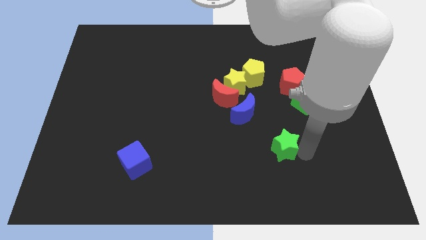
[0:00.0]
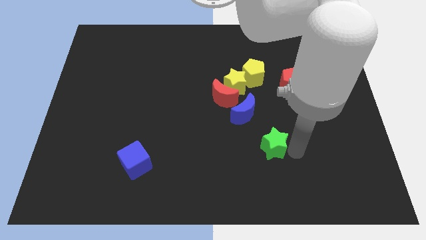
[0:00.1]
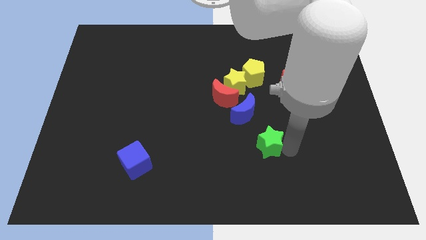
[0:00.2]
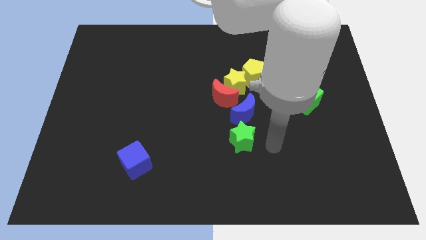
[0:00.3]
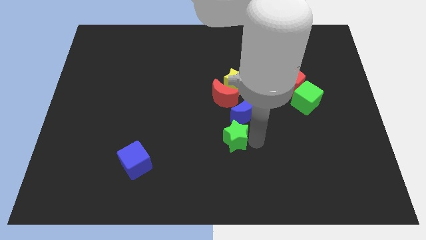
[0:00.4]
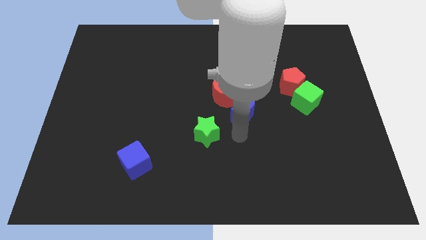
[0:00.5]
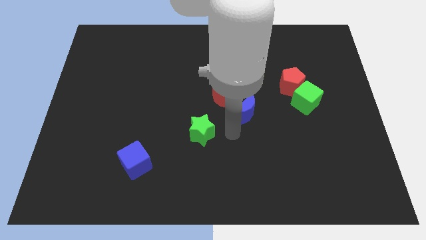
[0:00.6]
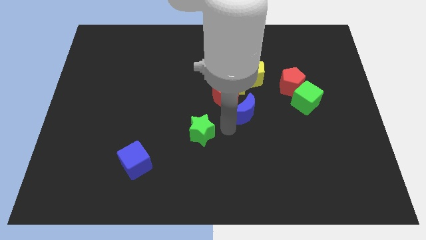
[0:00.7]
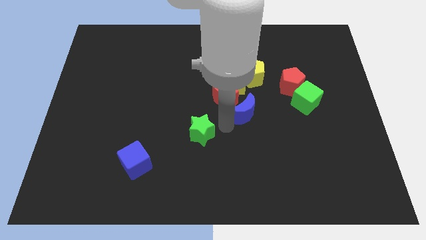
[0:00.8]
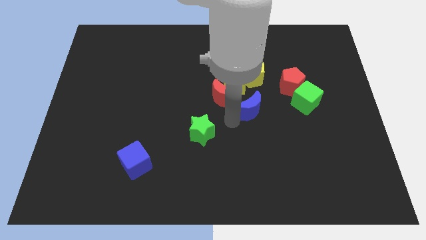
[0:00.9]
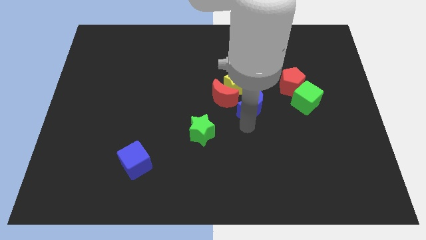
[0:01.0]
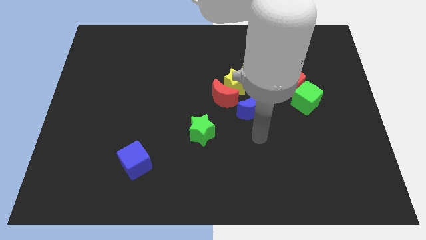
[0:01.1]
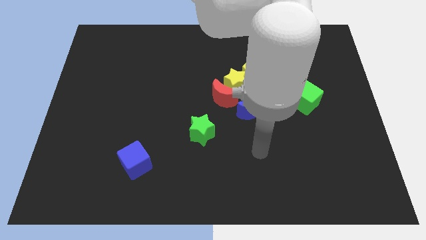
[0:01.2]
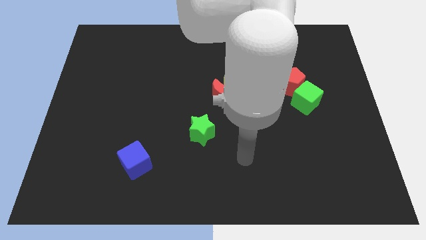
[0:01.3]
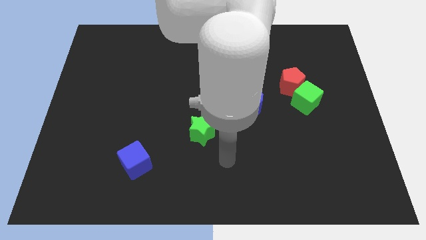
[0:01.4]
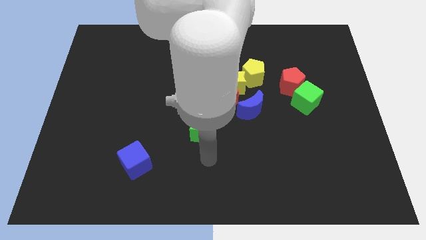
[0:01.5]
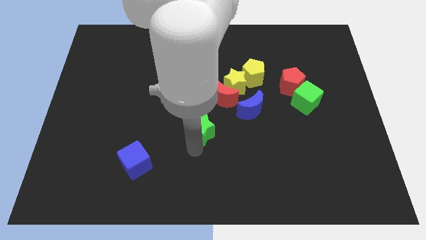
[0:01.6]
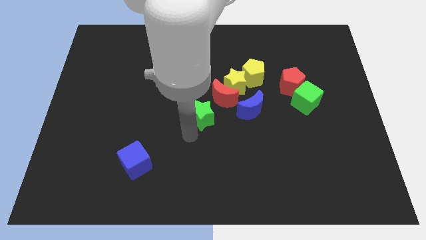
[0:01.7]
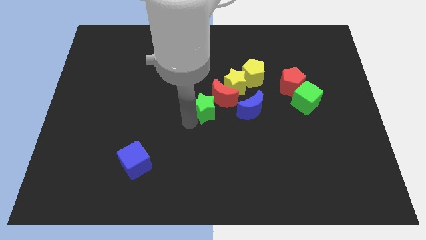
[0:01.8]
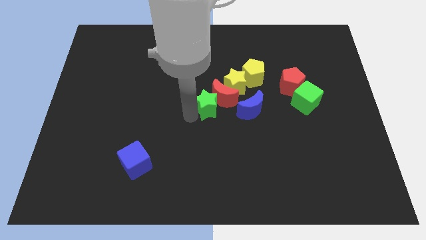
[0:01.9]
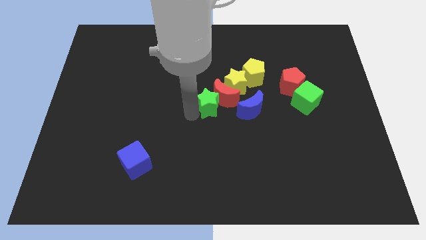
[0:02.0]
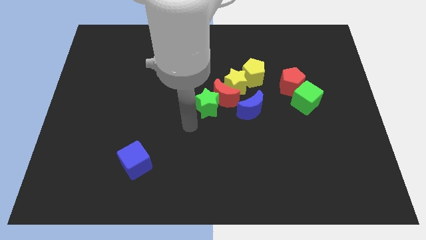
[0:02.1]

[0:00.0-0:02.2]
place green star below the red crescent

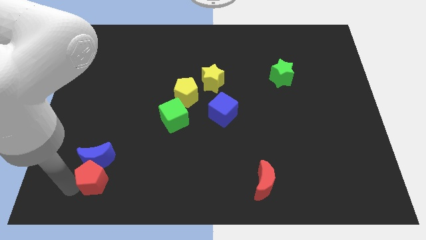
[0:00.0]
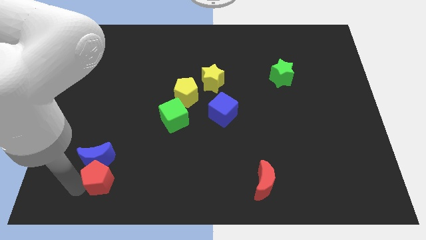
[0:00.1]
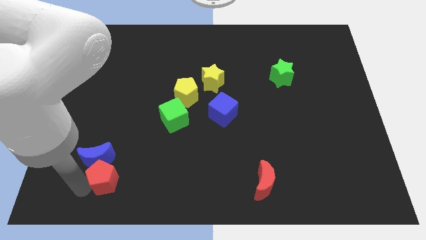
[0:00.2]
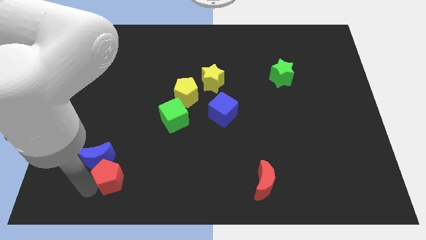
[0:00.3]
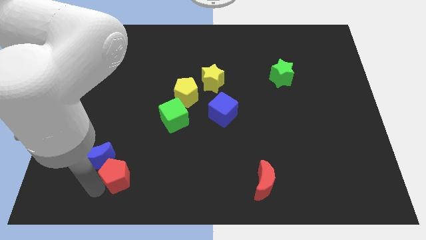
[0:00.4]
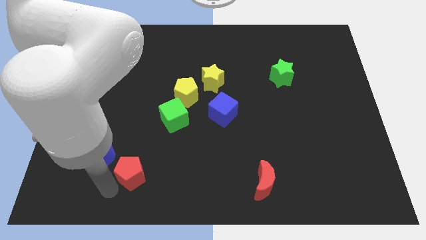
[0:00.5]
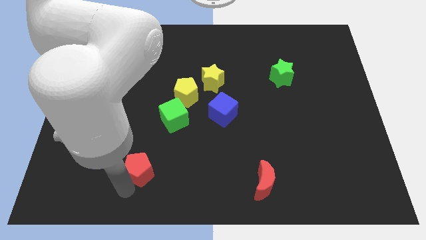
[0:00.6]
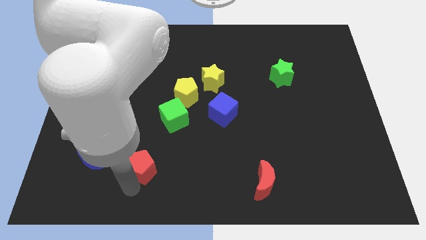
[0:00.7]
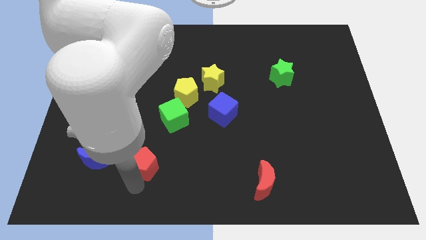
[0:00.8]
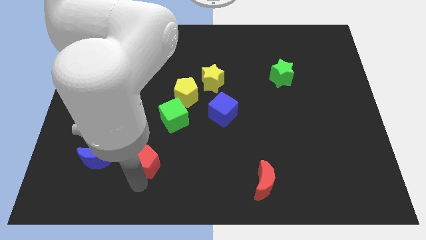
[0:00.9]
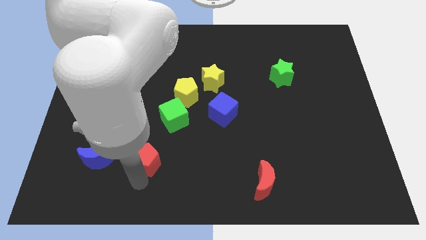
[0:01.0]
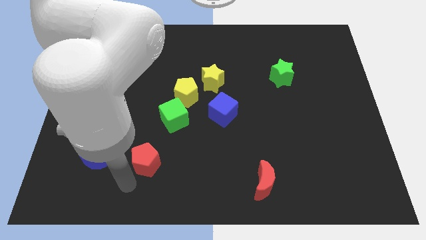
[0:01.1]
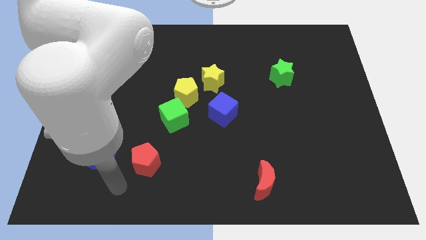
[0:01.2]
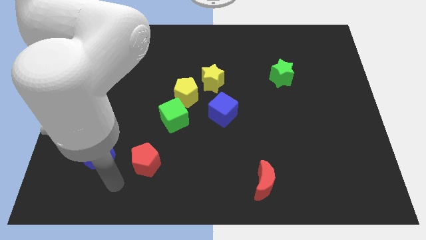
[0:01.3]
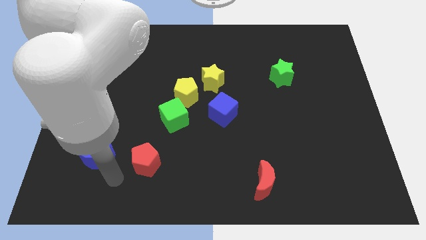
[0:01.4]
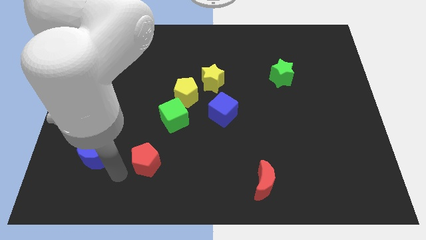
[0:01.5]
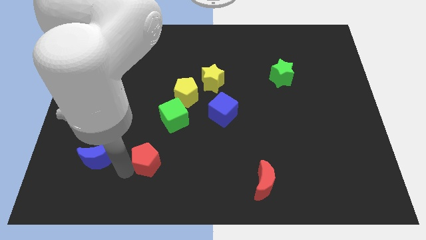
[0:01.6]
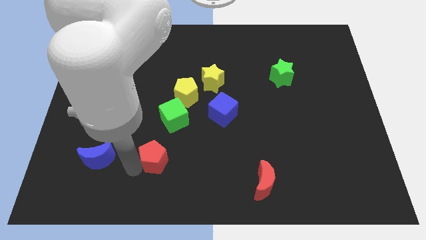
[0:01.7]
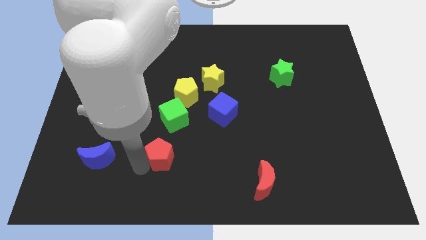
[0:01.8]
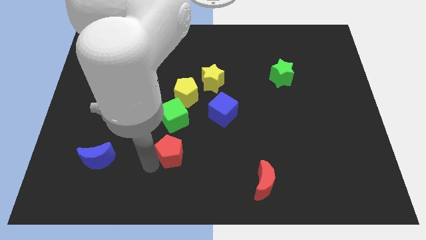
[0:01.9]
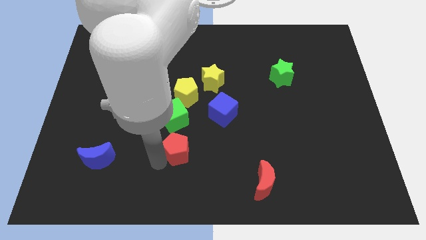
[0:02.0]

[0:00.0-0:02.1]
place the red pentagon below to the green cube

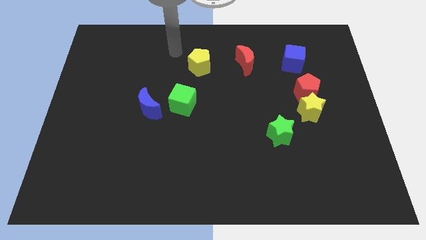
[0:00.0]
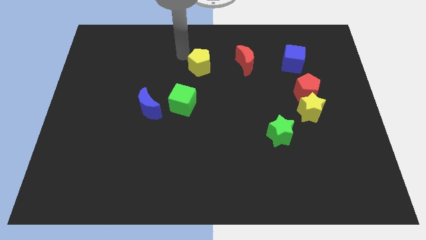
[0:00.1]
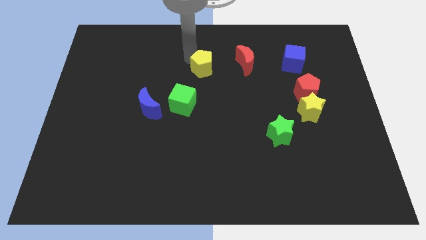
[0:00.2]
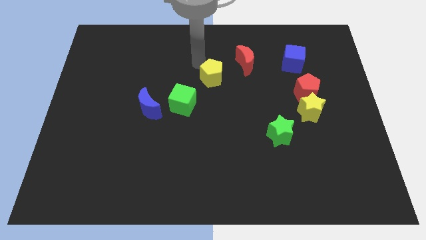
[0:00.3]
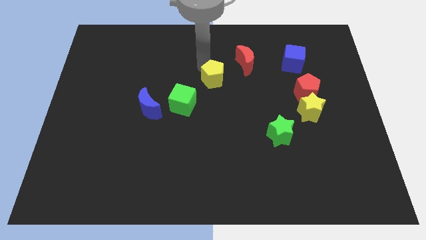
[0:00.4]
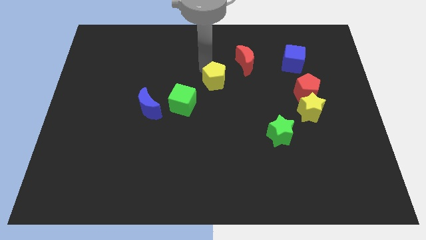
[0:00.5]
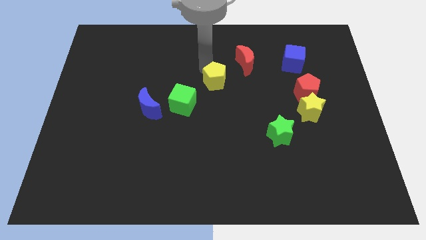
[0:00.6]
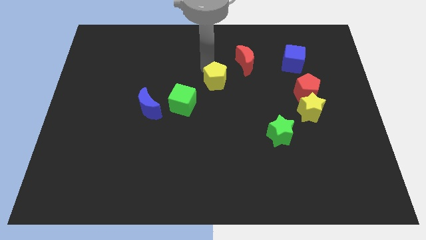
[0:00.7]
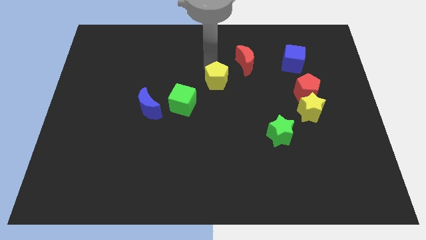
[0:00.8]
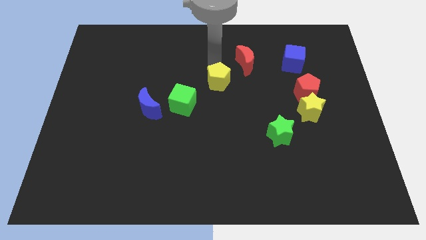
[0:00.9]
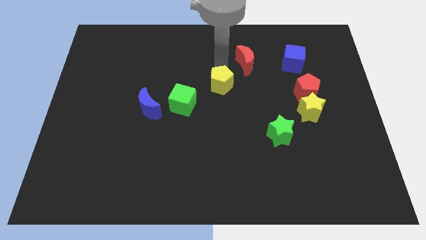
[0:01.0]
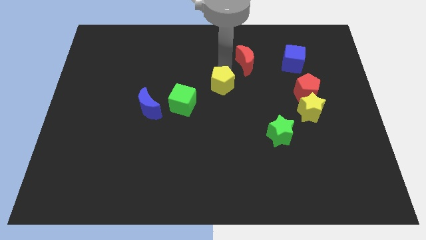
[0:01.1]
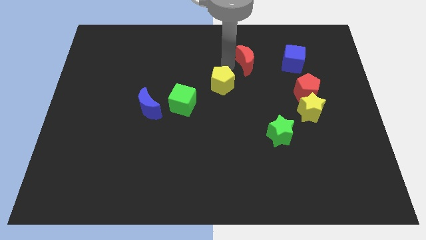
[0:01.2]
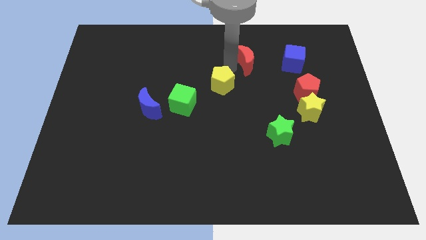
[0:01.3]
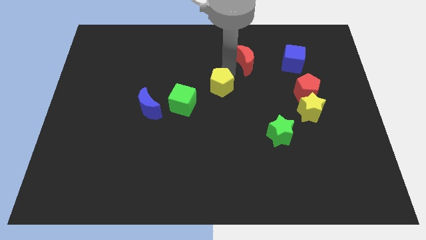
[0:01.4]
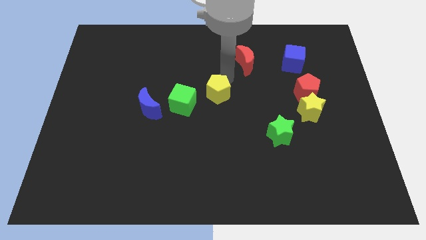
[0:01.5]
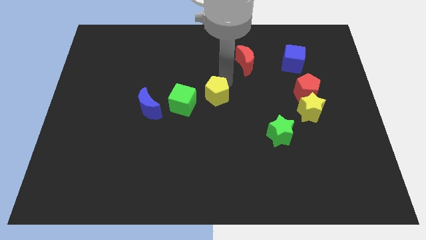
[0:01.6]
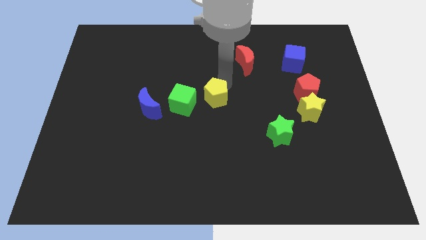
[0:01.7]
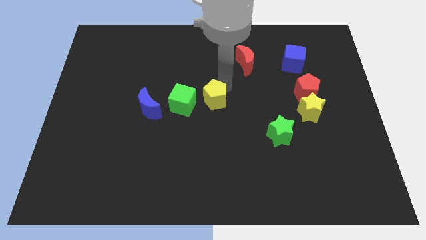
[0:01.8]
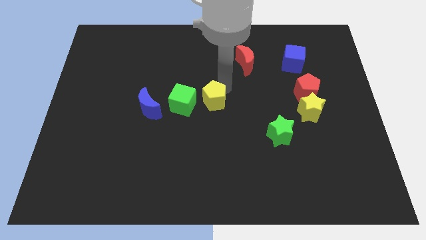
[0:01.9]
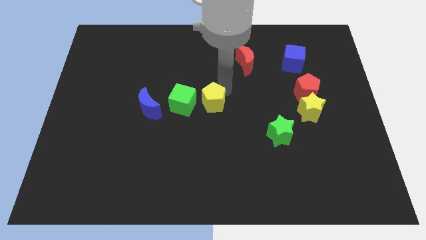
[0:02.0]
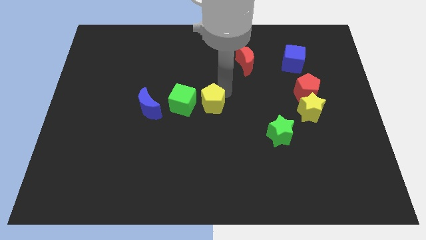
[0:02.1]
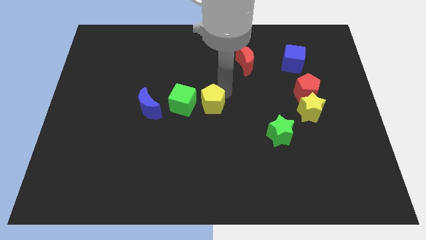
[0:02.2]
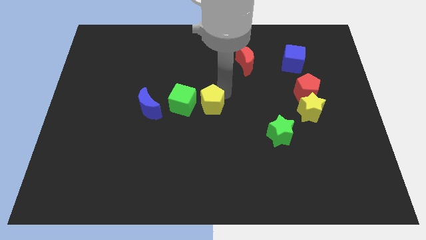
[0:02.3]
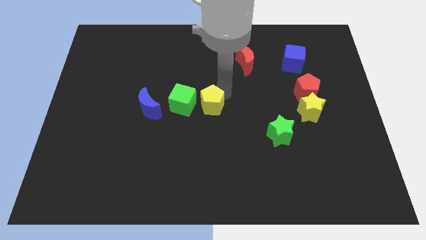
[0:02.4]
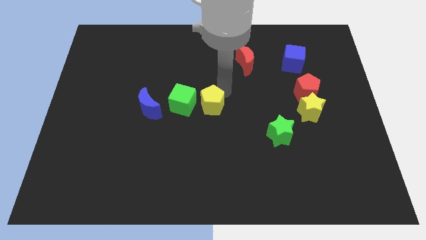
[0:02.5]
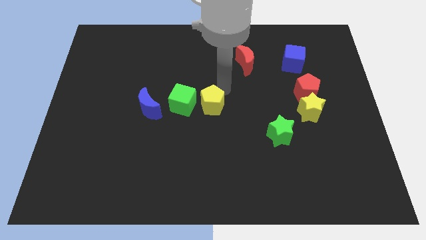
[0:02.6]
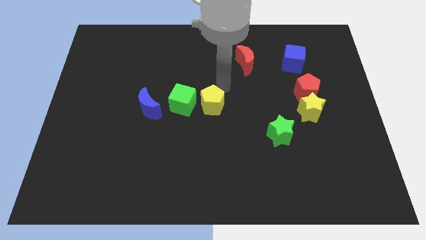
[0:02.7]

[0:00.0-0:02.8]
place the yellow pentgon right to the green cube

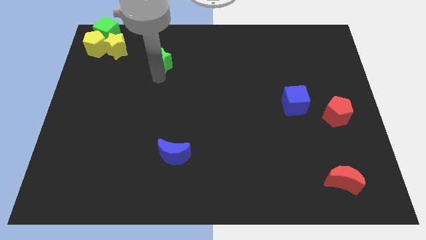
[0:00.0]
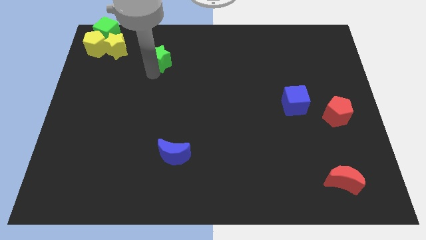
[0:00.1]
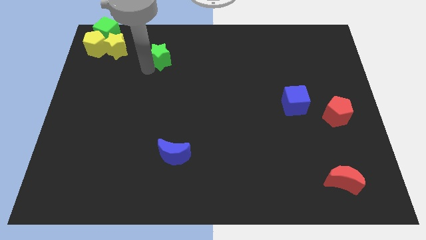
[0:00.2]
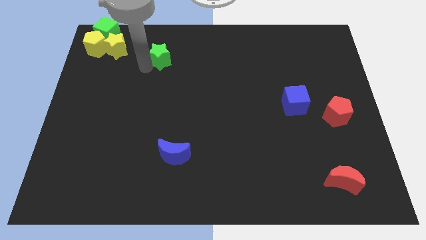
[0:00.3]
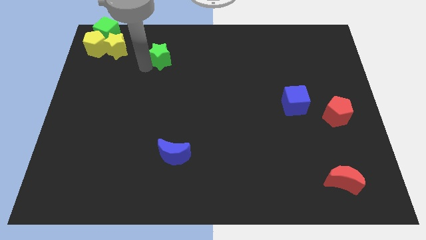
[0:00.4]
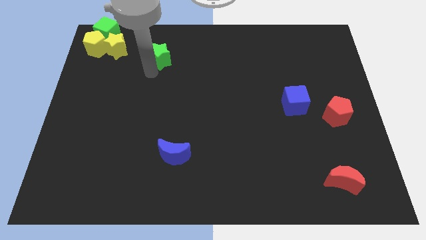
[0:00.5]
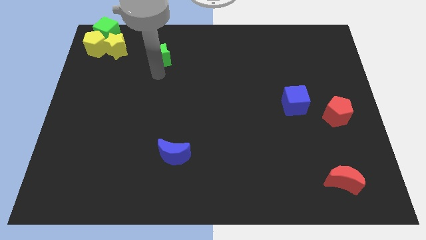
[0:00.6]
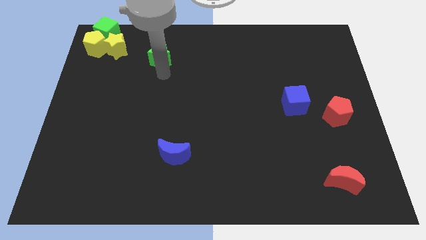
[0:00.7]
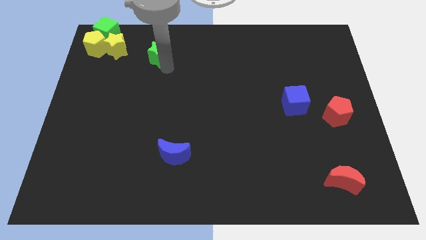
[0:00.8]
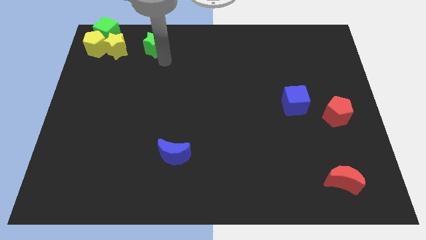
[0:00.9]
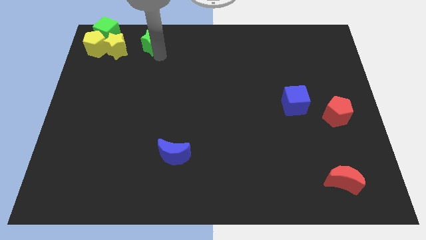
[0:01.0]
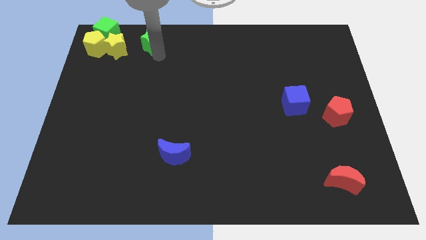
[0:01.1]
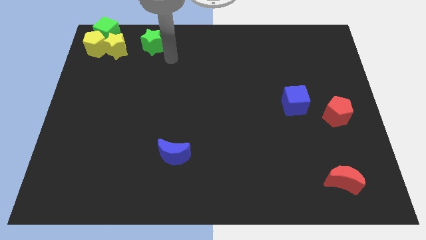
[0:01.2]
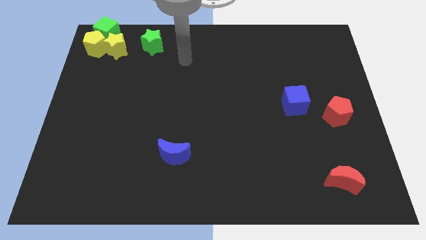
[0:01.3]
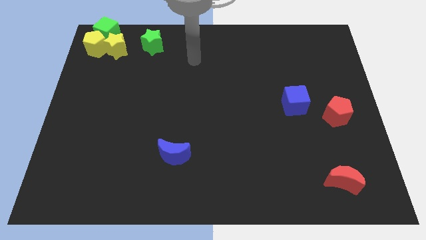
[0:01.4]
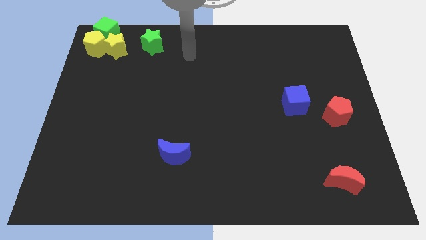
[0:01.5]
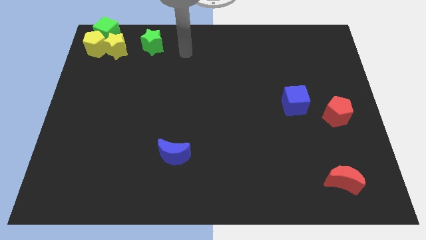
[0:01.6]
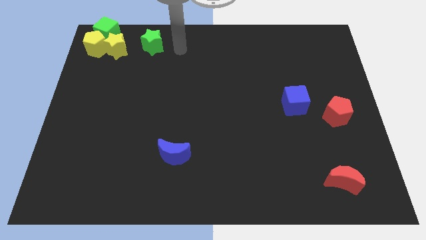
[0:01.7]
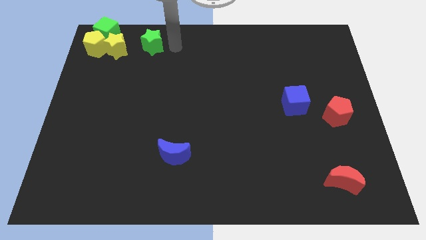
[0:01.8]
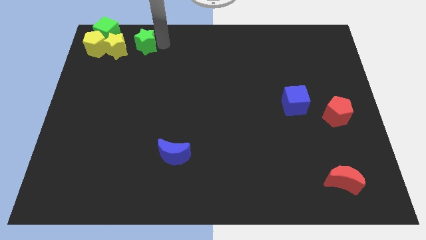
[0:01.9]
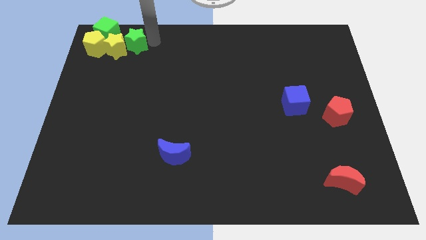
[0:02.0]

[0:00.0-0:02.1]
move the green star towards the yellow star
